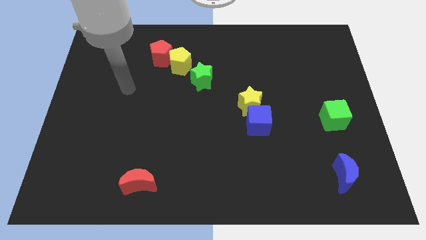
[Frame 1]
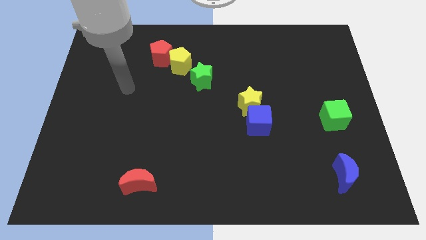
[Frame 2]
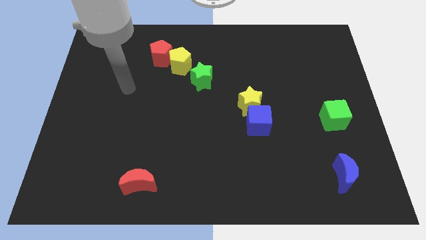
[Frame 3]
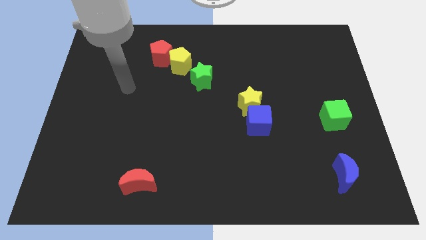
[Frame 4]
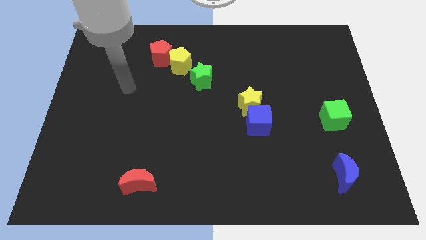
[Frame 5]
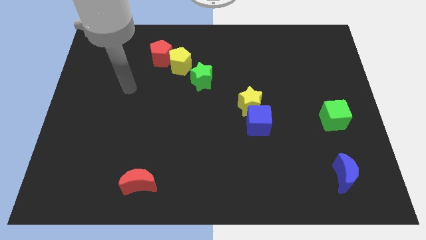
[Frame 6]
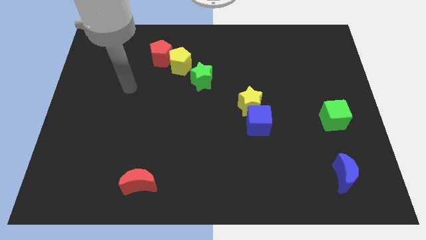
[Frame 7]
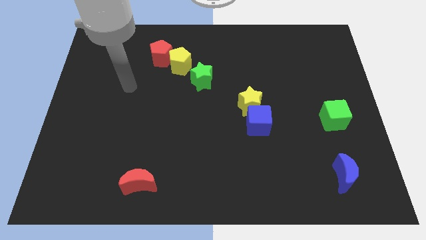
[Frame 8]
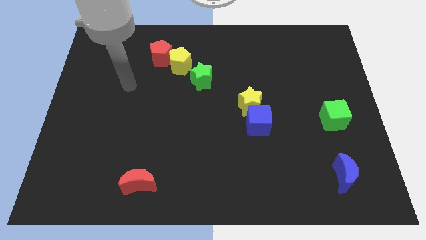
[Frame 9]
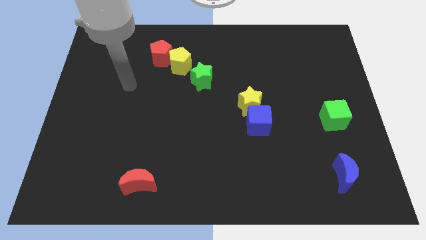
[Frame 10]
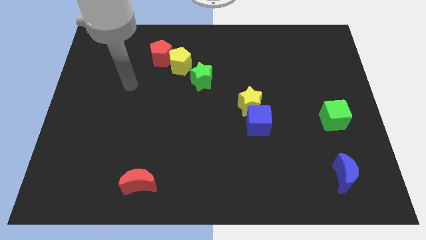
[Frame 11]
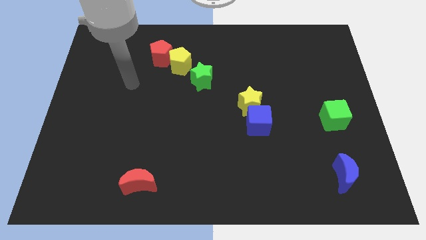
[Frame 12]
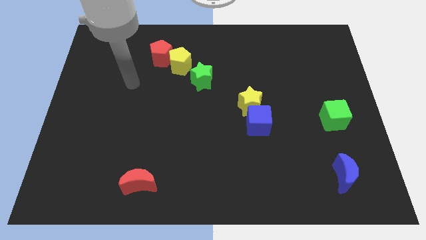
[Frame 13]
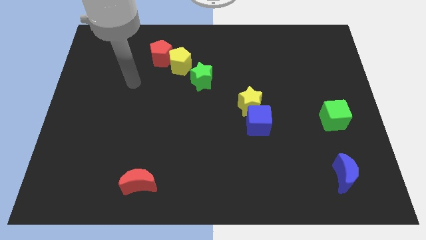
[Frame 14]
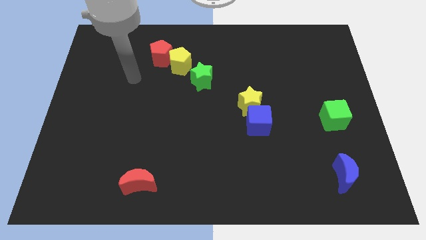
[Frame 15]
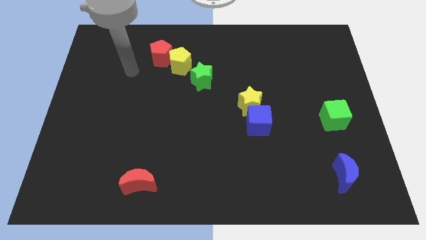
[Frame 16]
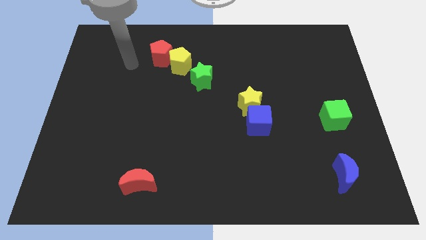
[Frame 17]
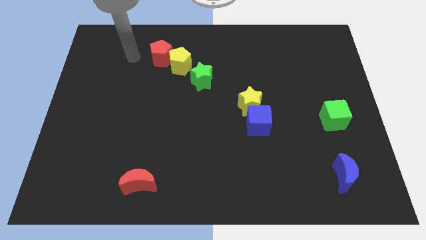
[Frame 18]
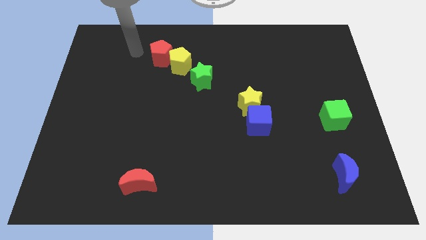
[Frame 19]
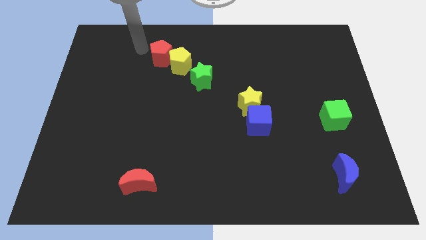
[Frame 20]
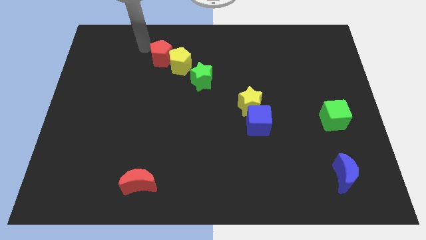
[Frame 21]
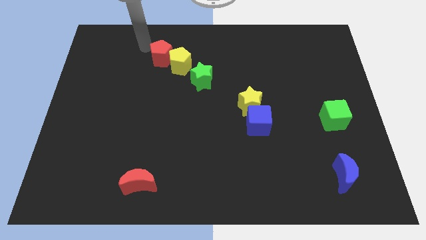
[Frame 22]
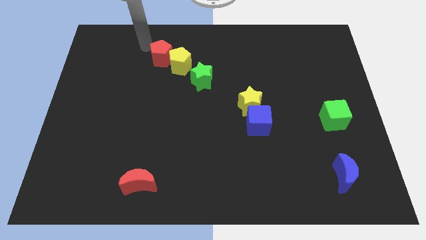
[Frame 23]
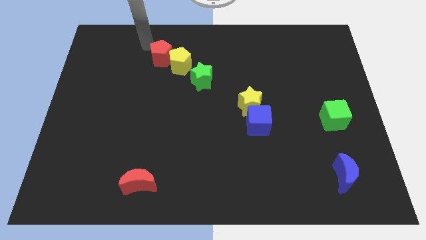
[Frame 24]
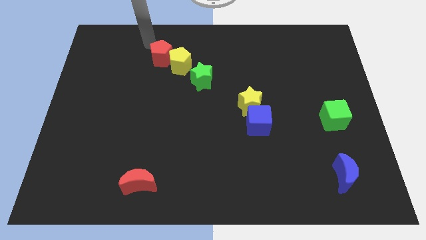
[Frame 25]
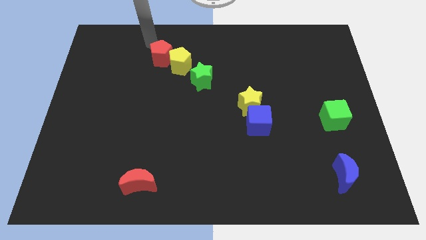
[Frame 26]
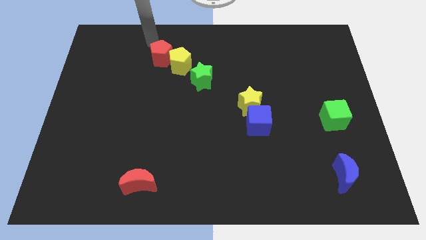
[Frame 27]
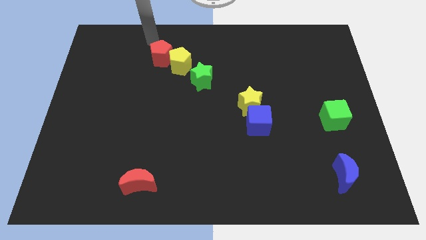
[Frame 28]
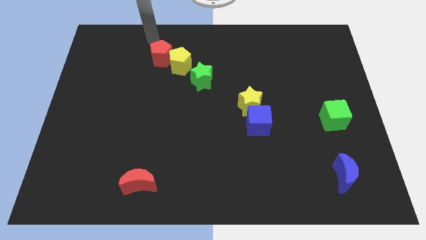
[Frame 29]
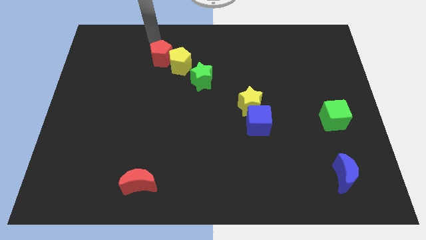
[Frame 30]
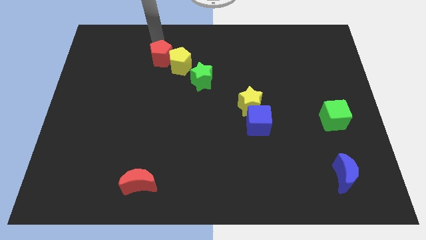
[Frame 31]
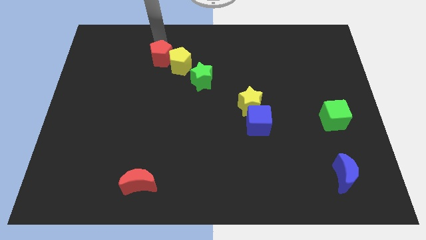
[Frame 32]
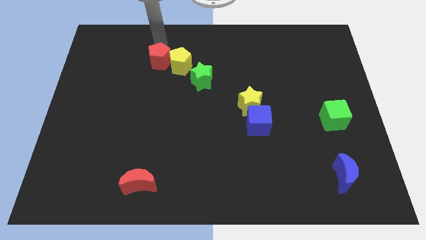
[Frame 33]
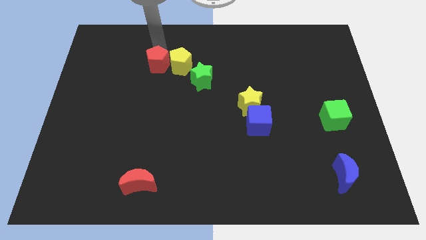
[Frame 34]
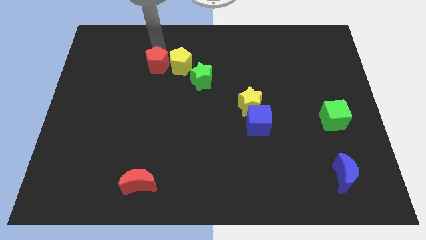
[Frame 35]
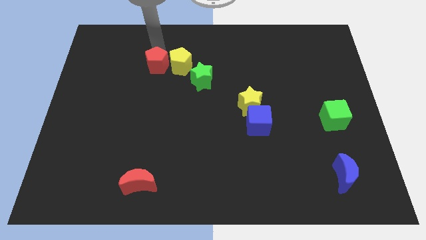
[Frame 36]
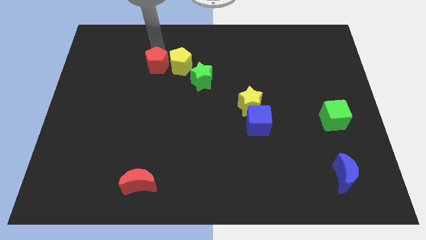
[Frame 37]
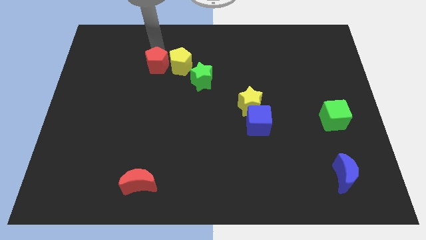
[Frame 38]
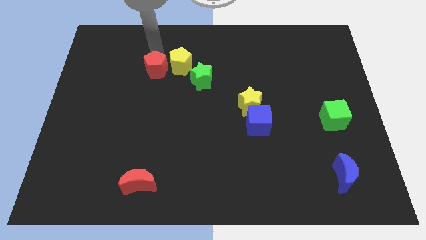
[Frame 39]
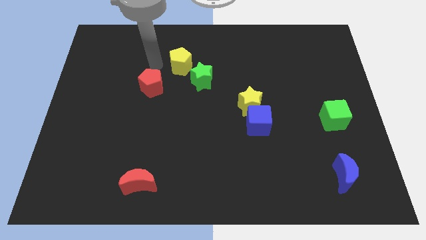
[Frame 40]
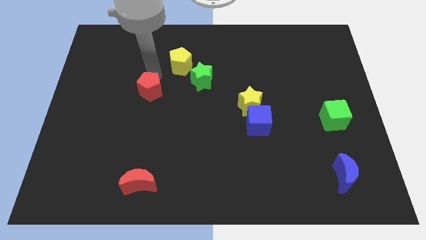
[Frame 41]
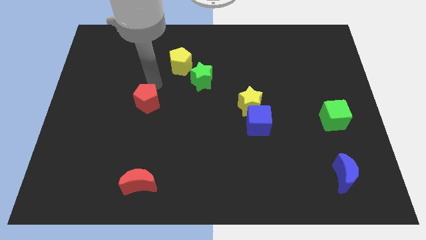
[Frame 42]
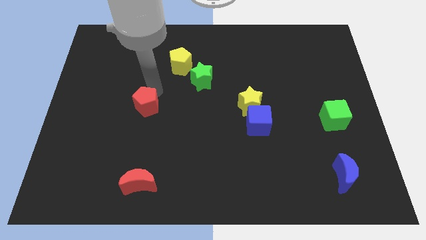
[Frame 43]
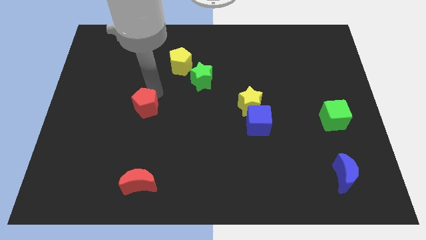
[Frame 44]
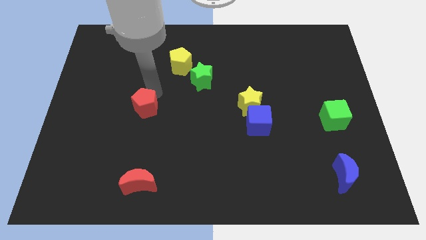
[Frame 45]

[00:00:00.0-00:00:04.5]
separate the red pentagon from yellow pentagon

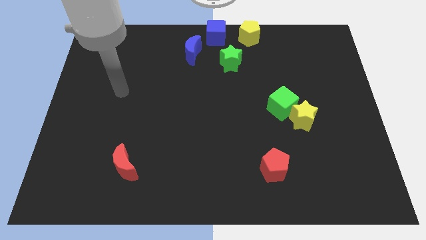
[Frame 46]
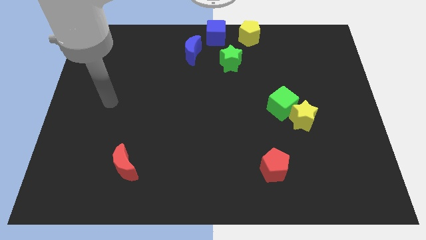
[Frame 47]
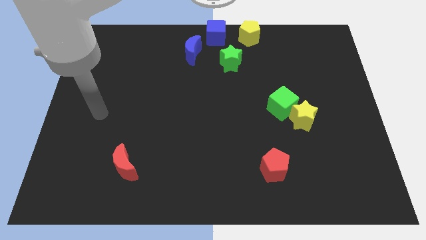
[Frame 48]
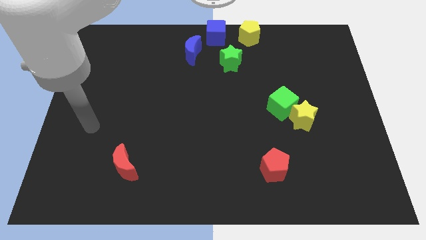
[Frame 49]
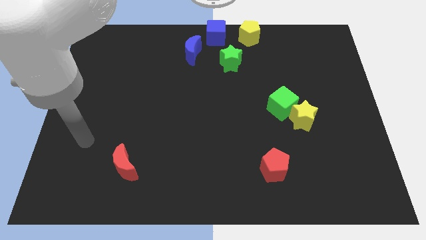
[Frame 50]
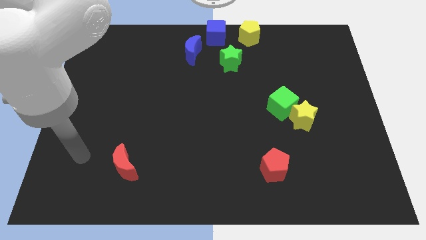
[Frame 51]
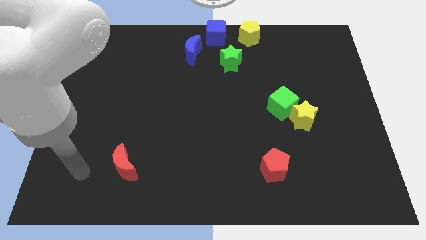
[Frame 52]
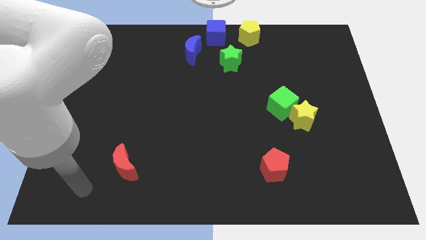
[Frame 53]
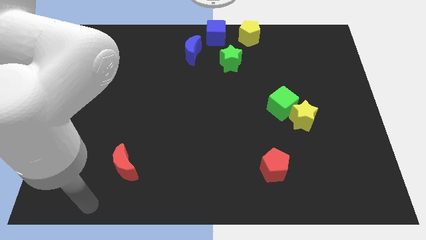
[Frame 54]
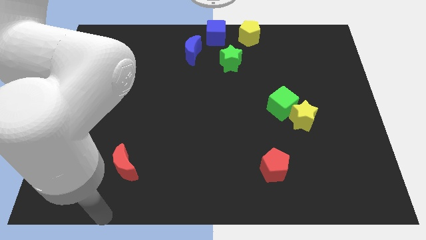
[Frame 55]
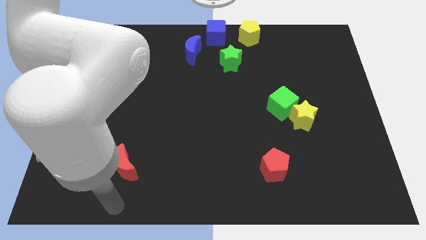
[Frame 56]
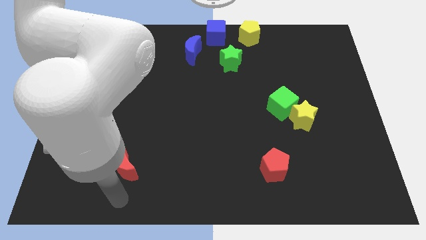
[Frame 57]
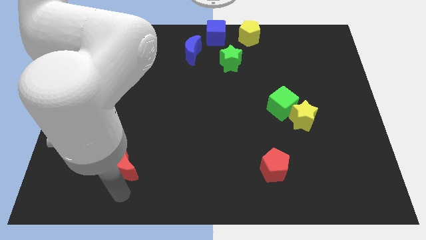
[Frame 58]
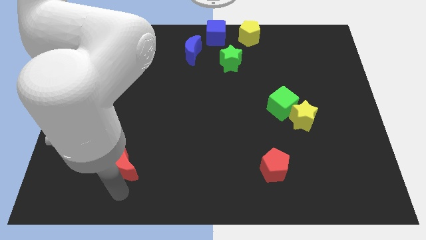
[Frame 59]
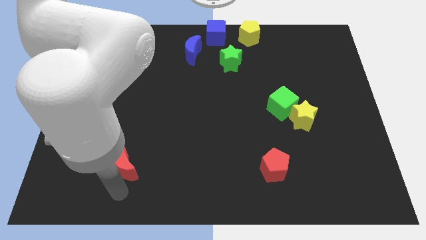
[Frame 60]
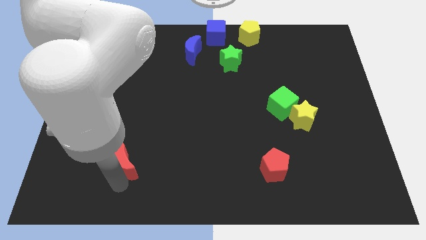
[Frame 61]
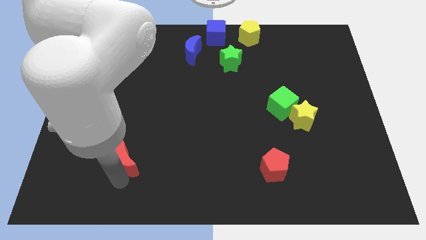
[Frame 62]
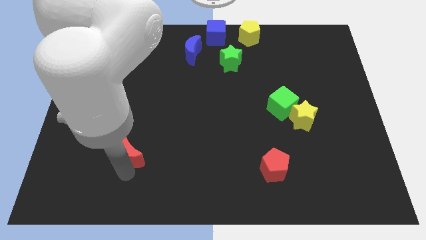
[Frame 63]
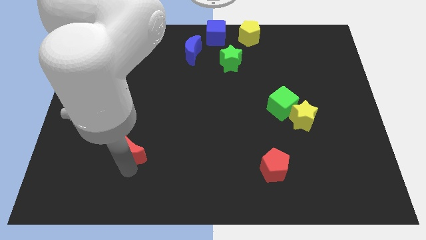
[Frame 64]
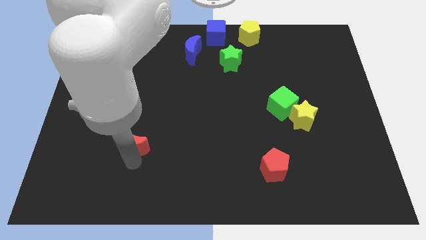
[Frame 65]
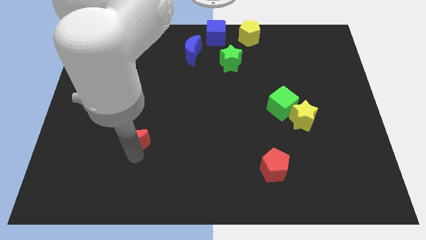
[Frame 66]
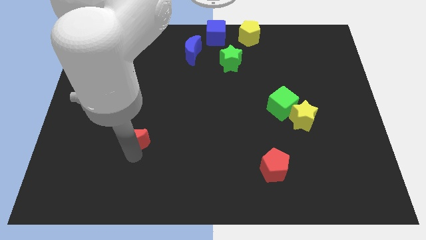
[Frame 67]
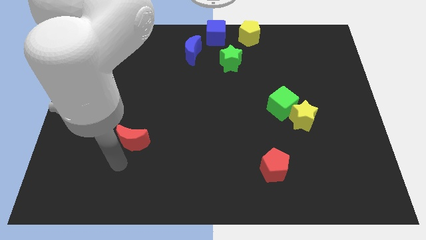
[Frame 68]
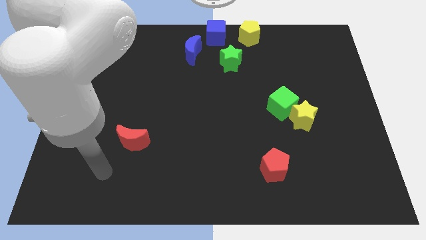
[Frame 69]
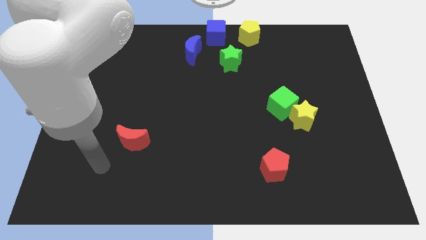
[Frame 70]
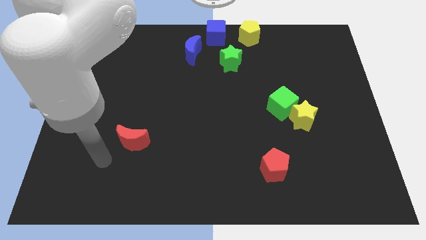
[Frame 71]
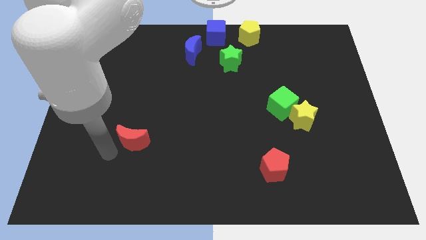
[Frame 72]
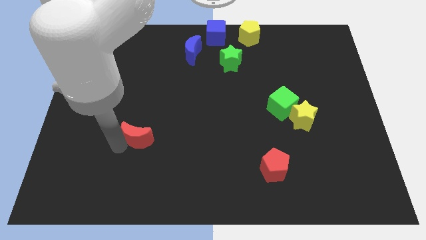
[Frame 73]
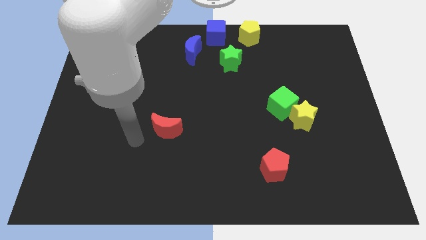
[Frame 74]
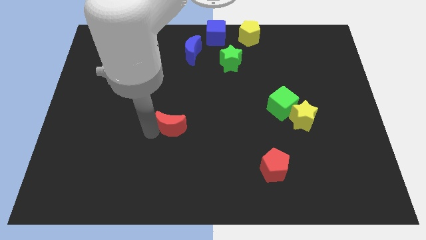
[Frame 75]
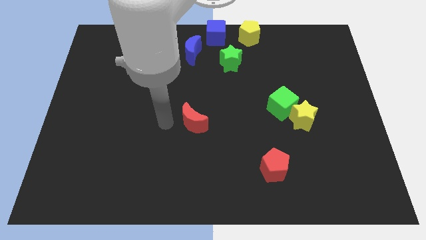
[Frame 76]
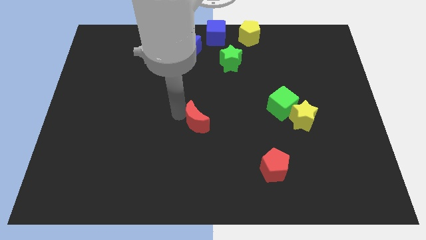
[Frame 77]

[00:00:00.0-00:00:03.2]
push the red crescent diagonal to the red pentagon

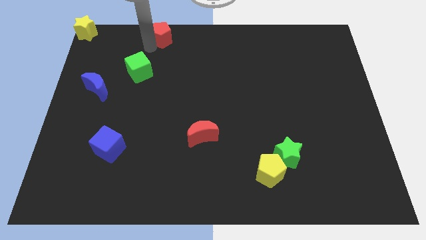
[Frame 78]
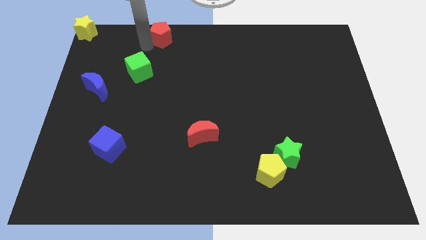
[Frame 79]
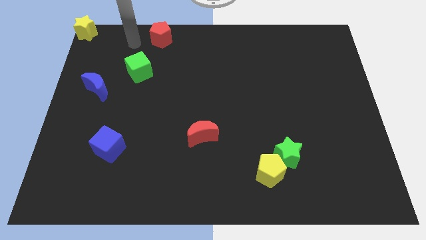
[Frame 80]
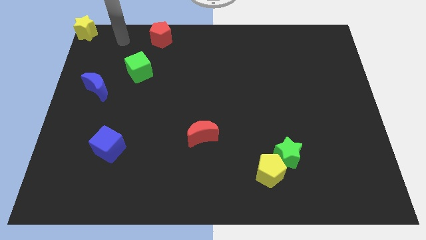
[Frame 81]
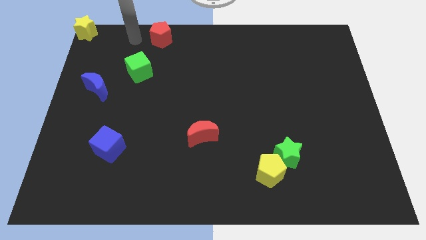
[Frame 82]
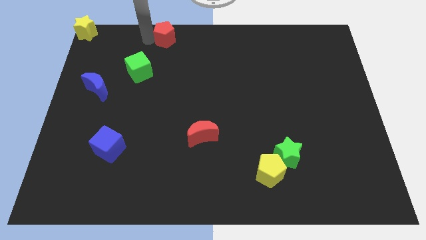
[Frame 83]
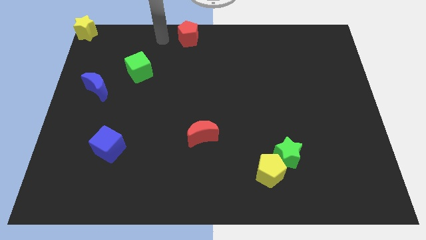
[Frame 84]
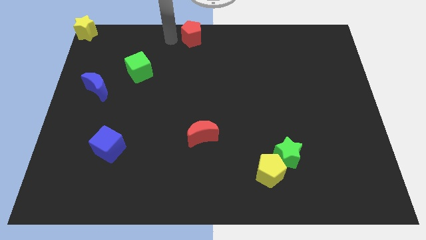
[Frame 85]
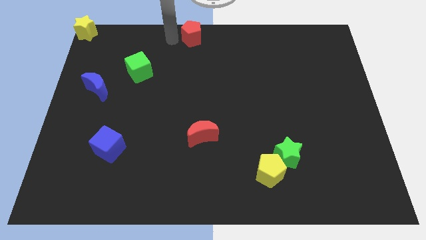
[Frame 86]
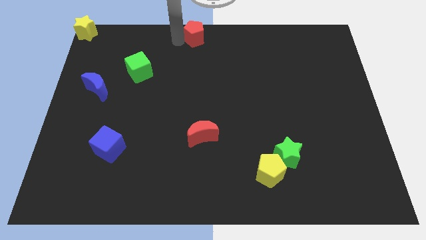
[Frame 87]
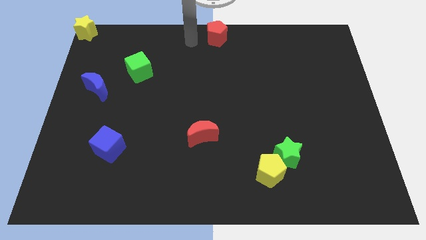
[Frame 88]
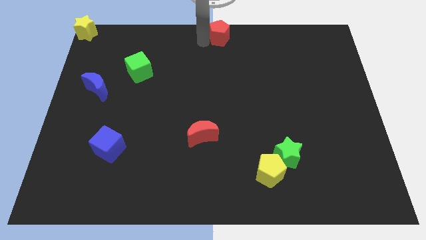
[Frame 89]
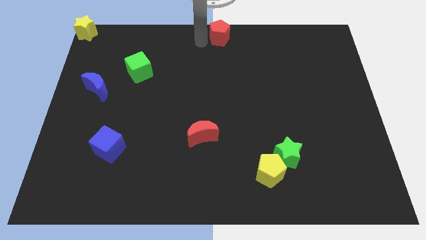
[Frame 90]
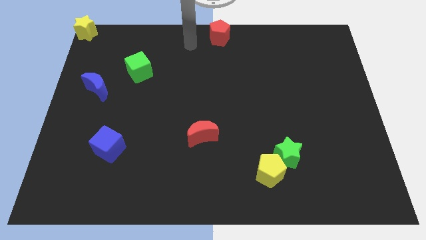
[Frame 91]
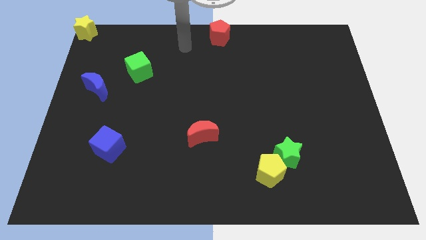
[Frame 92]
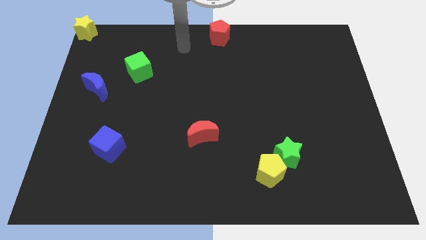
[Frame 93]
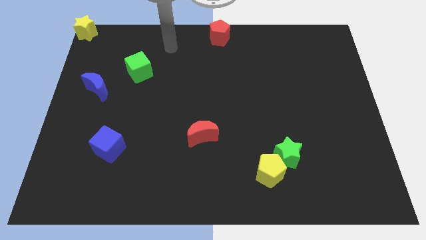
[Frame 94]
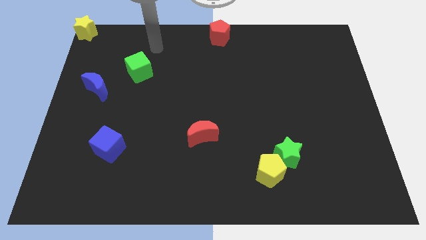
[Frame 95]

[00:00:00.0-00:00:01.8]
place the red pentagon at the top center of the board
